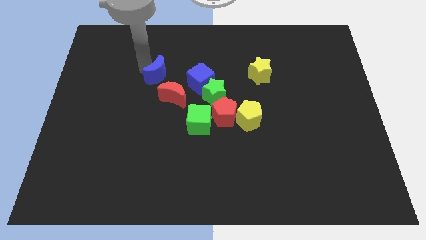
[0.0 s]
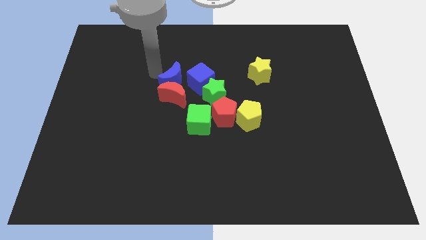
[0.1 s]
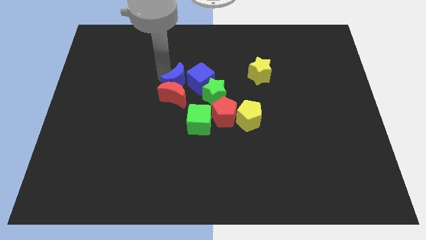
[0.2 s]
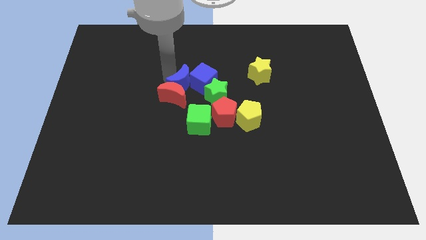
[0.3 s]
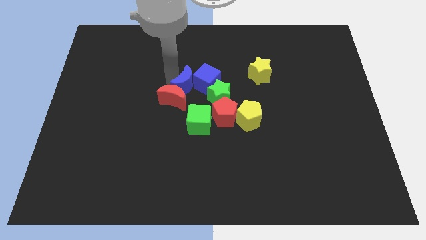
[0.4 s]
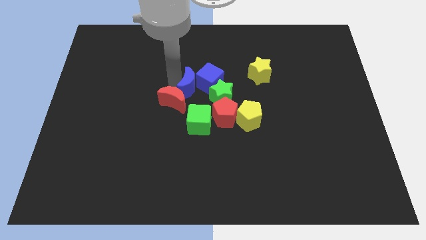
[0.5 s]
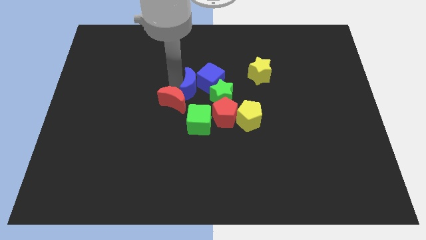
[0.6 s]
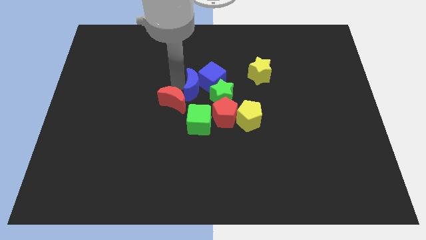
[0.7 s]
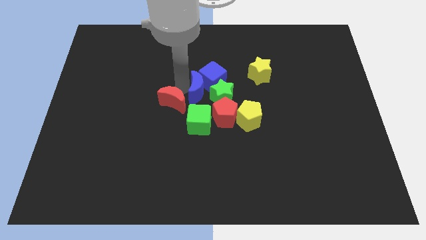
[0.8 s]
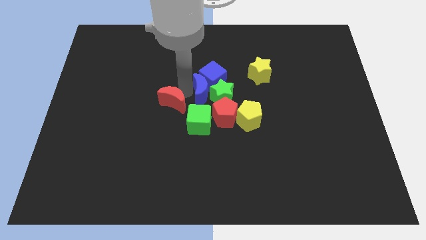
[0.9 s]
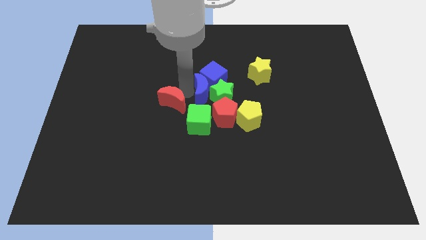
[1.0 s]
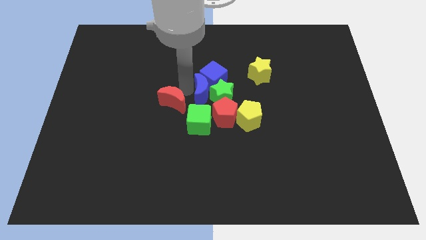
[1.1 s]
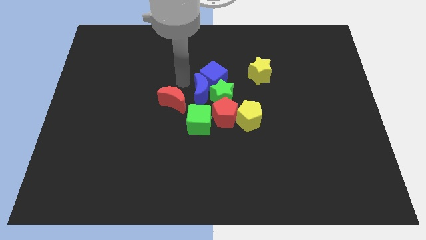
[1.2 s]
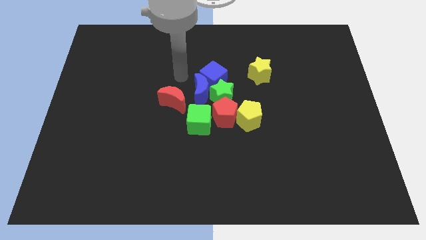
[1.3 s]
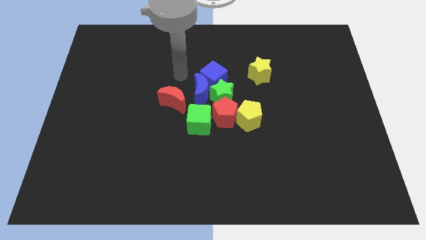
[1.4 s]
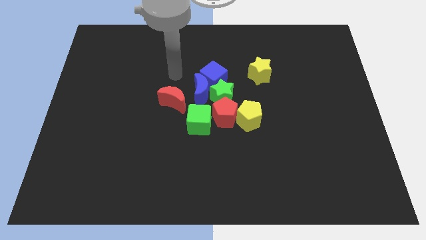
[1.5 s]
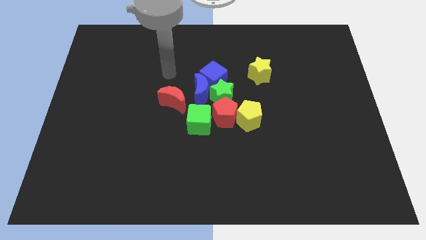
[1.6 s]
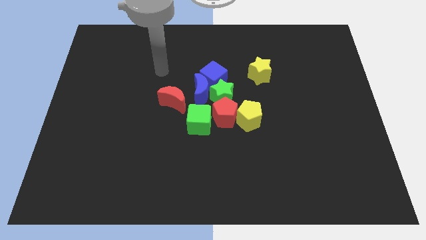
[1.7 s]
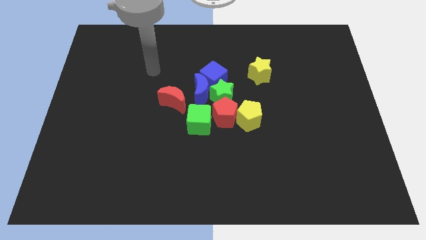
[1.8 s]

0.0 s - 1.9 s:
move the blue crescent towards the left side of the green star

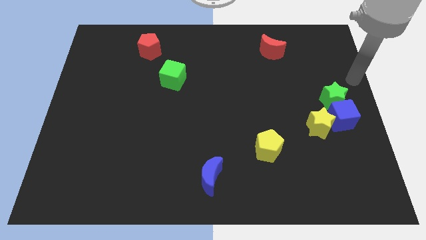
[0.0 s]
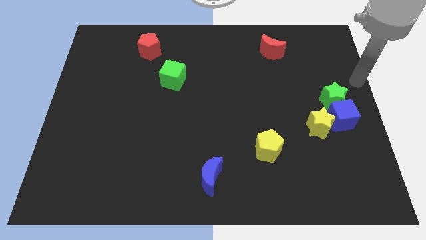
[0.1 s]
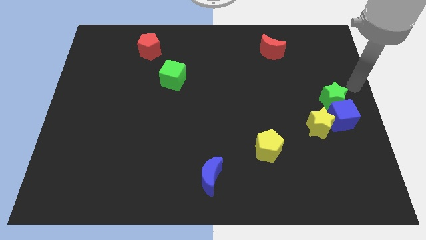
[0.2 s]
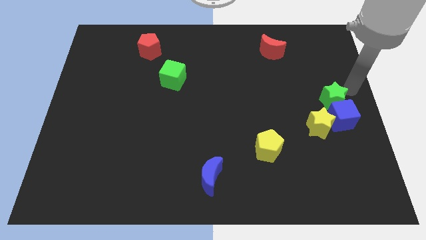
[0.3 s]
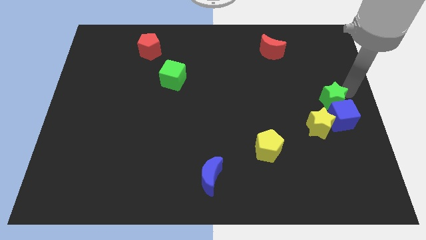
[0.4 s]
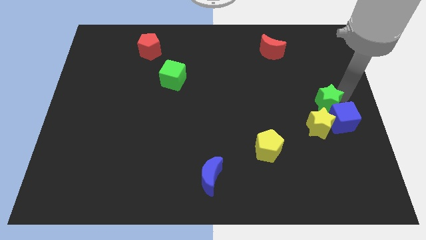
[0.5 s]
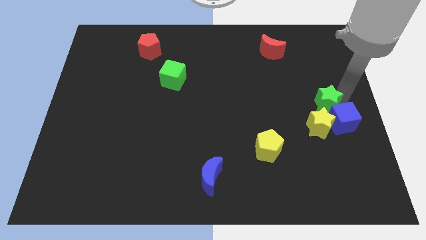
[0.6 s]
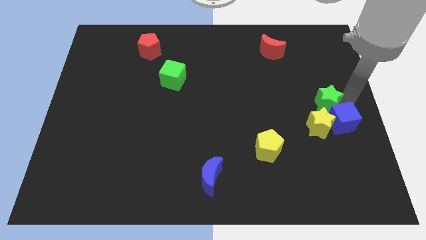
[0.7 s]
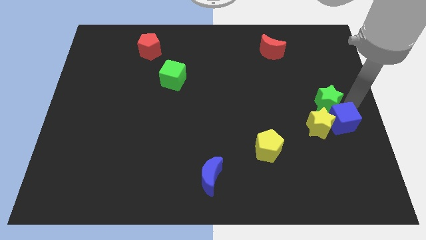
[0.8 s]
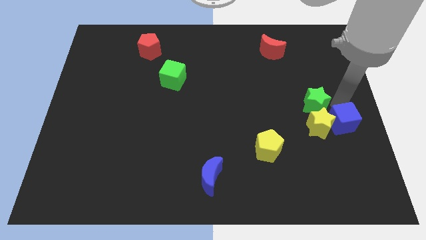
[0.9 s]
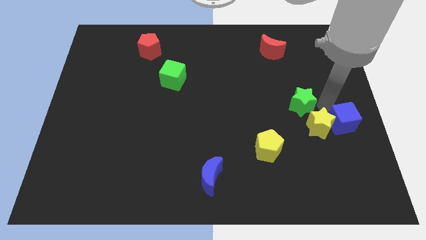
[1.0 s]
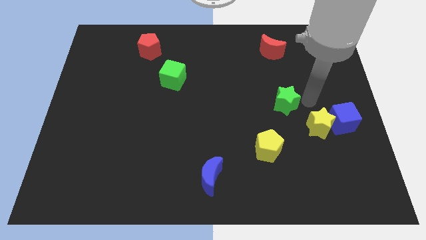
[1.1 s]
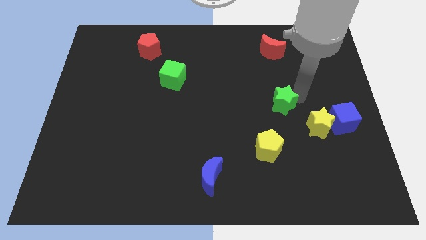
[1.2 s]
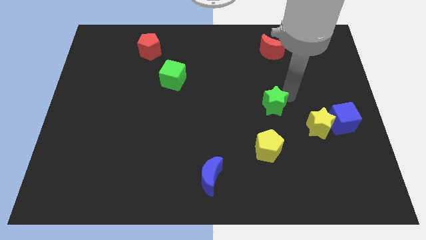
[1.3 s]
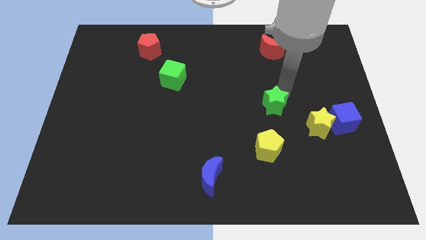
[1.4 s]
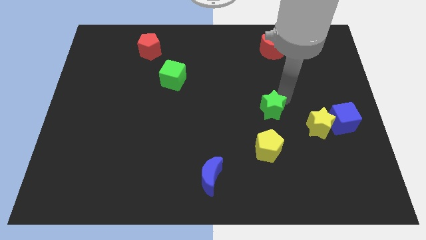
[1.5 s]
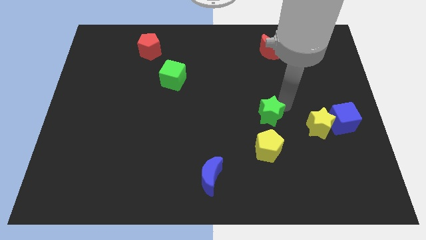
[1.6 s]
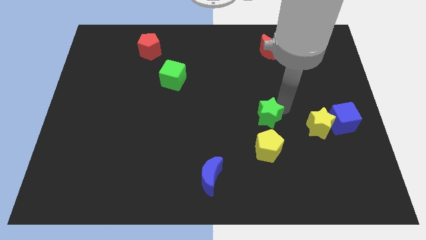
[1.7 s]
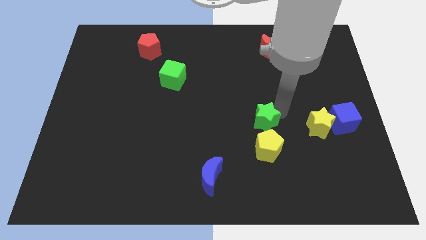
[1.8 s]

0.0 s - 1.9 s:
separate green star from blue cube

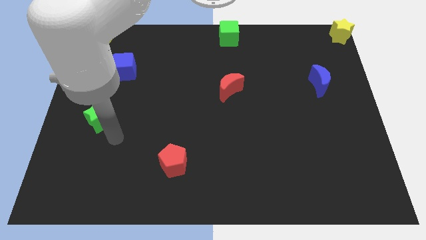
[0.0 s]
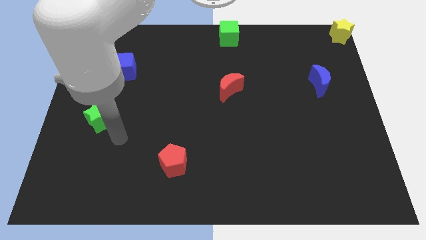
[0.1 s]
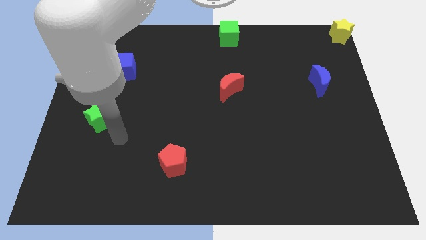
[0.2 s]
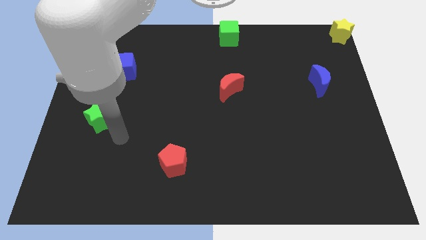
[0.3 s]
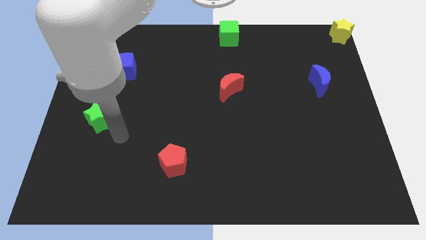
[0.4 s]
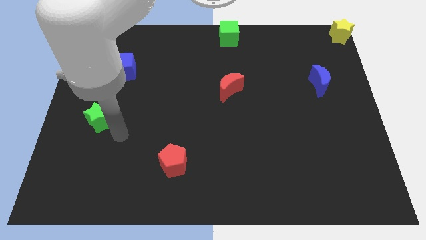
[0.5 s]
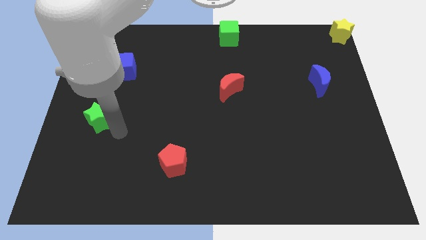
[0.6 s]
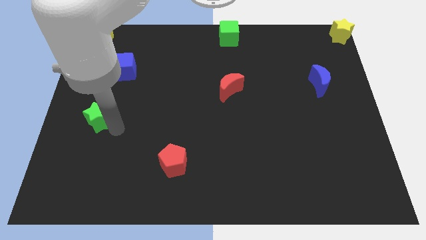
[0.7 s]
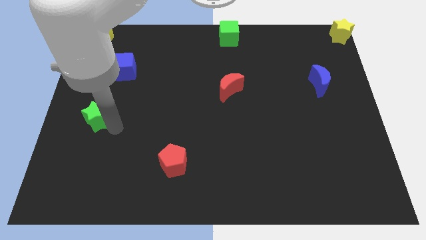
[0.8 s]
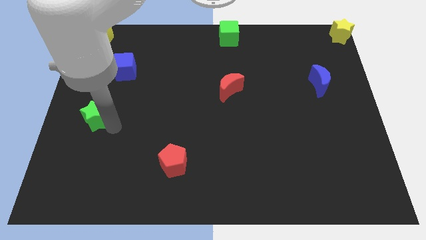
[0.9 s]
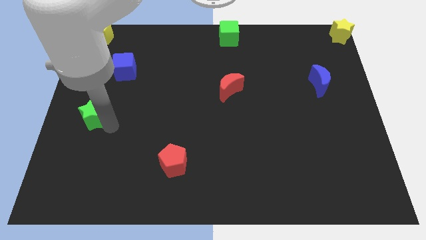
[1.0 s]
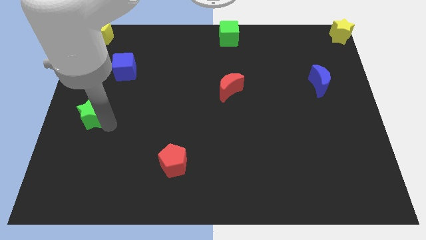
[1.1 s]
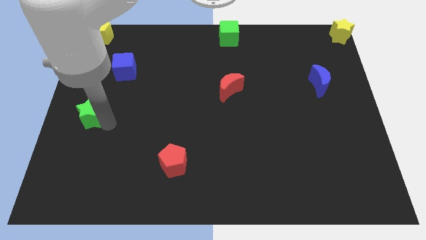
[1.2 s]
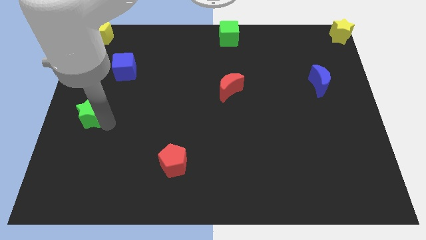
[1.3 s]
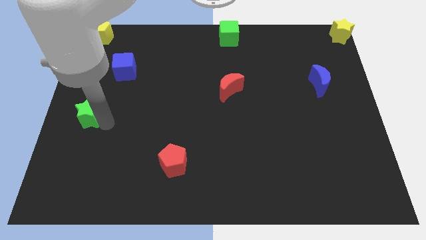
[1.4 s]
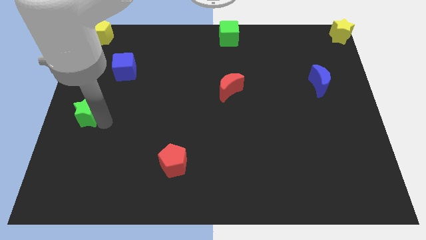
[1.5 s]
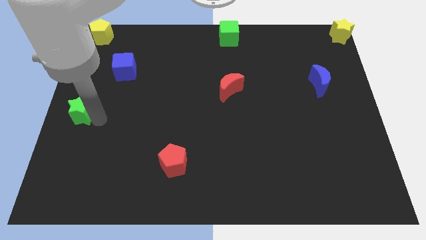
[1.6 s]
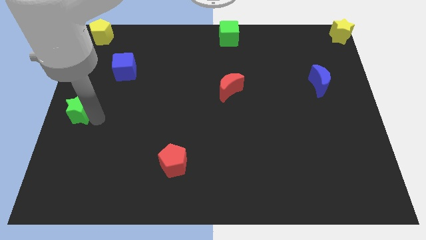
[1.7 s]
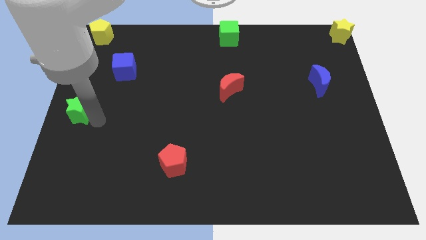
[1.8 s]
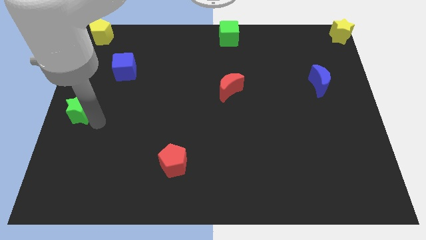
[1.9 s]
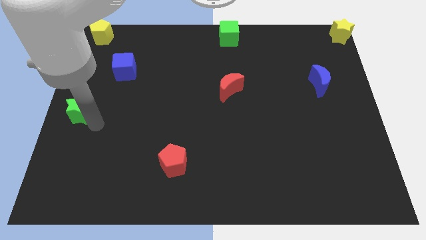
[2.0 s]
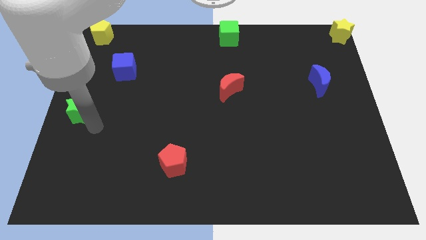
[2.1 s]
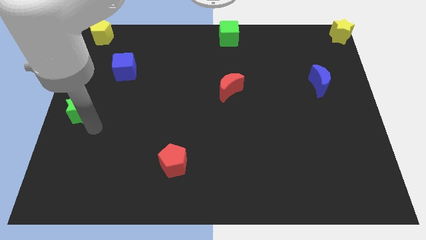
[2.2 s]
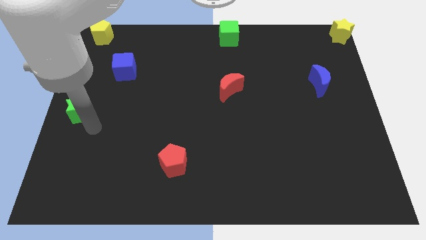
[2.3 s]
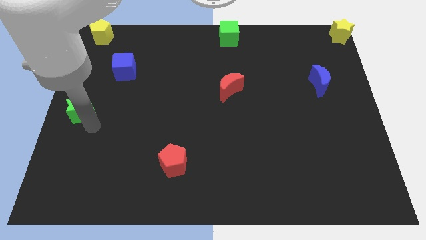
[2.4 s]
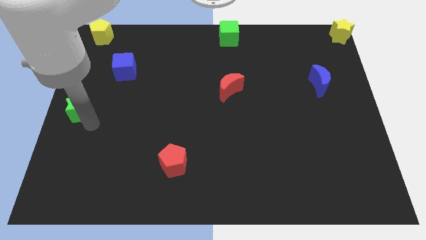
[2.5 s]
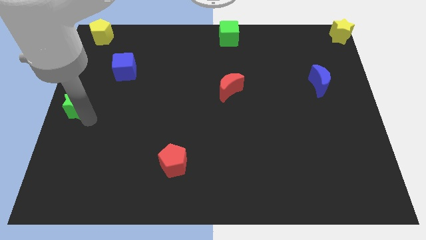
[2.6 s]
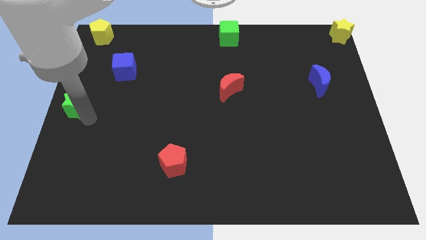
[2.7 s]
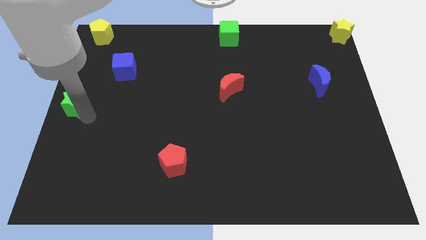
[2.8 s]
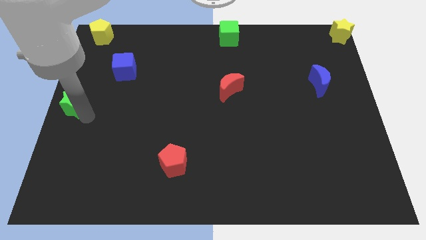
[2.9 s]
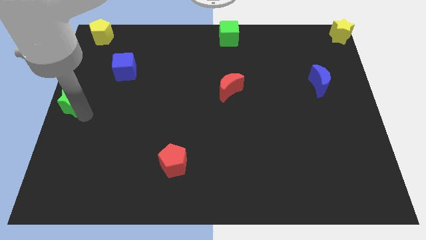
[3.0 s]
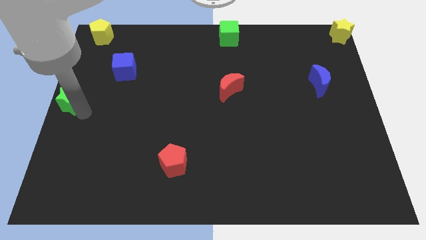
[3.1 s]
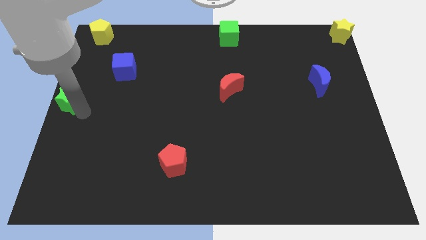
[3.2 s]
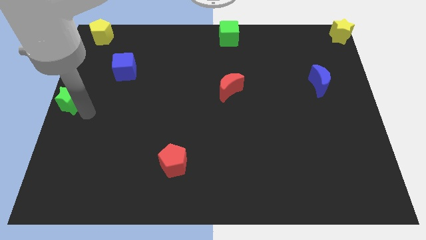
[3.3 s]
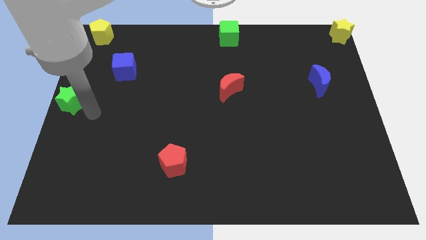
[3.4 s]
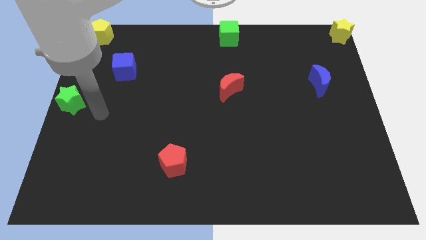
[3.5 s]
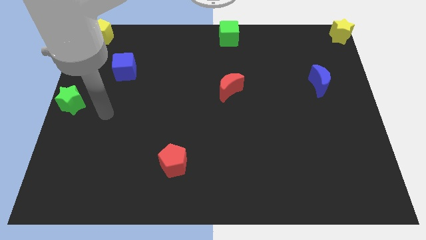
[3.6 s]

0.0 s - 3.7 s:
push the green star to the left center

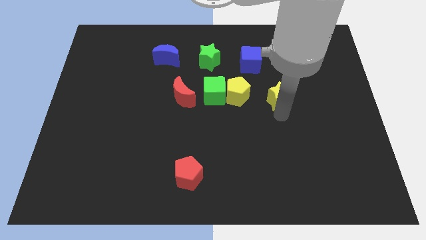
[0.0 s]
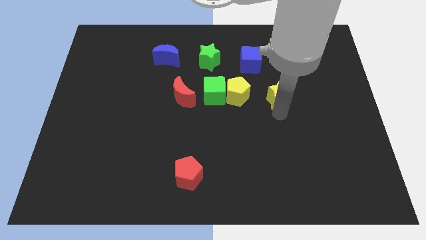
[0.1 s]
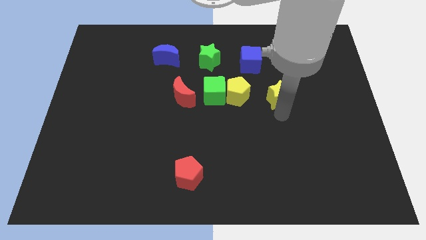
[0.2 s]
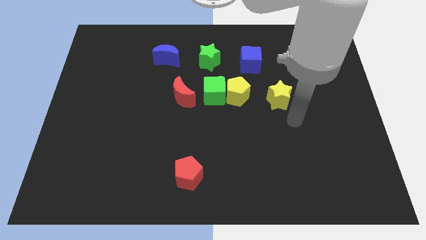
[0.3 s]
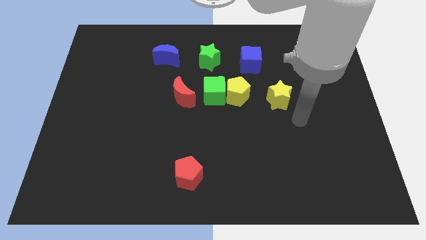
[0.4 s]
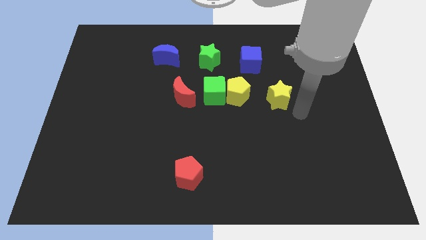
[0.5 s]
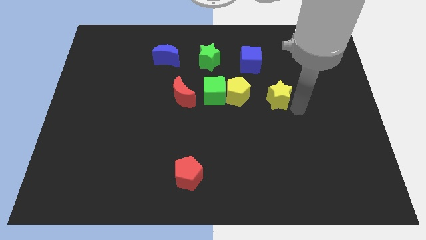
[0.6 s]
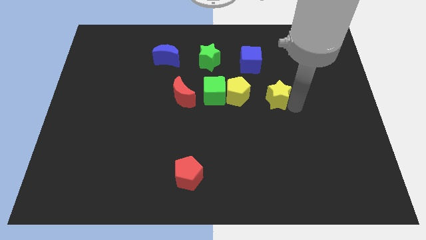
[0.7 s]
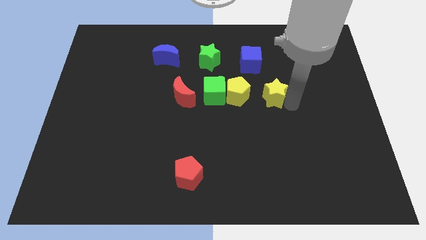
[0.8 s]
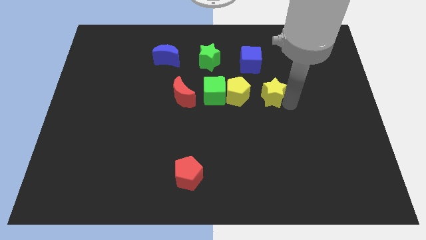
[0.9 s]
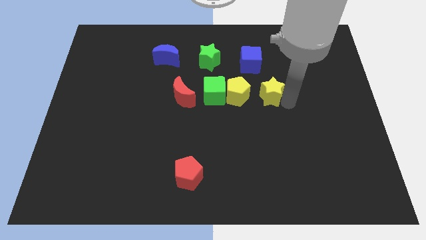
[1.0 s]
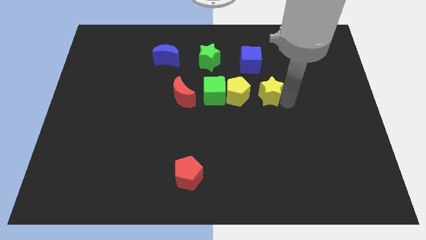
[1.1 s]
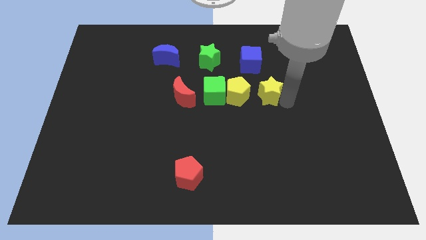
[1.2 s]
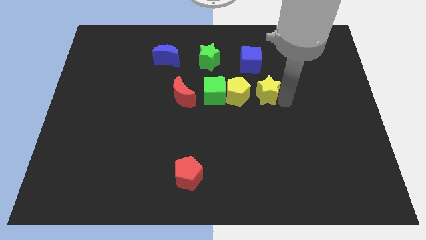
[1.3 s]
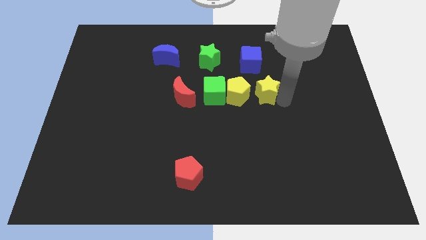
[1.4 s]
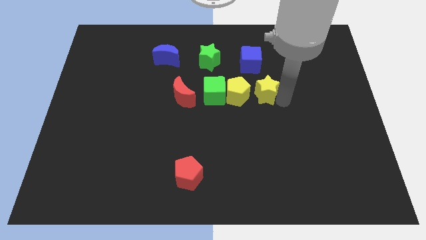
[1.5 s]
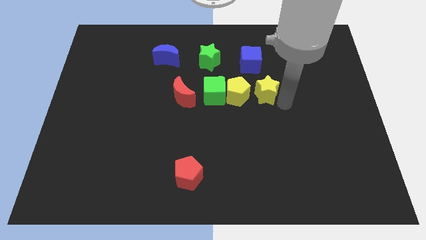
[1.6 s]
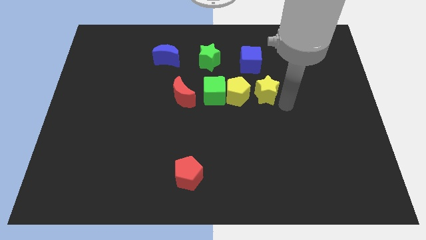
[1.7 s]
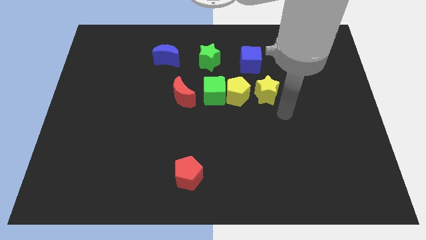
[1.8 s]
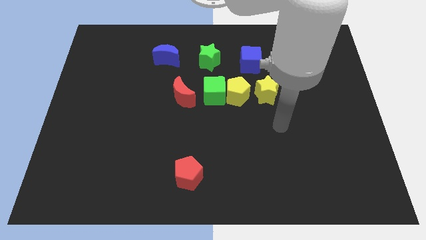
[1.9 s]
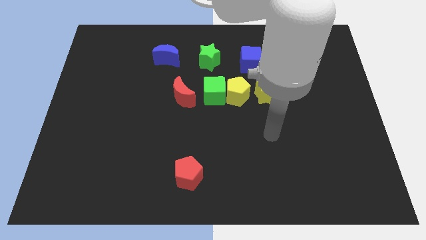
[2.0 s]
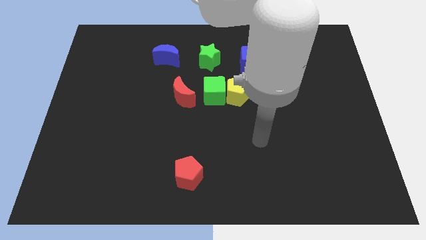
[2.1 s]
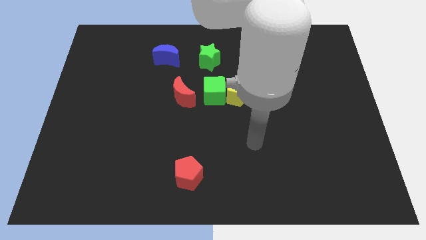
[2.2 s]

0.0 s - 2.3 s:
place the yellow star to the right of the yellow pentagon
